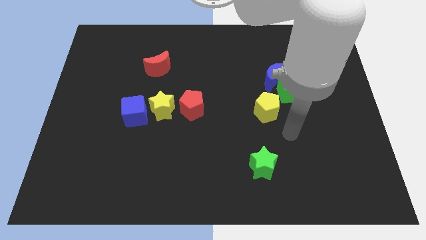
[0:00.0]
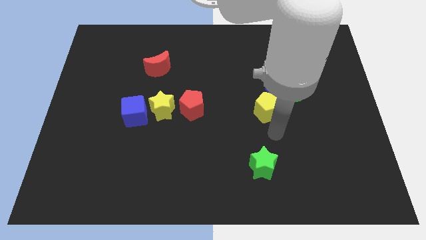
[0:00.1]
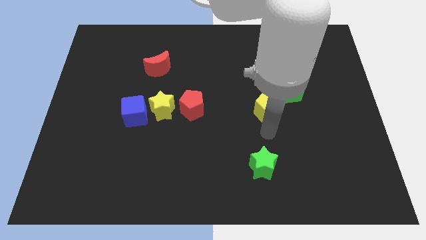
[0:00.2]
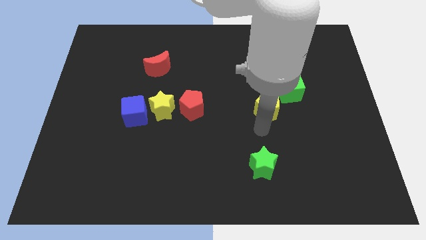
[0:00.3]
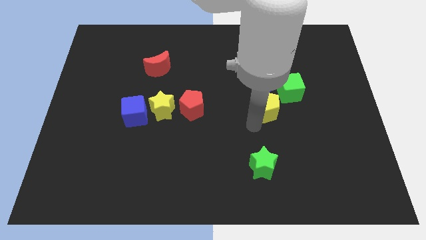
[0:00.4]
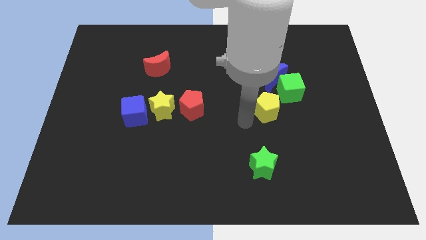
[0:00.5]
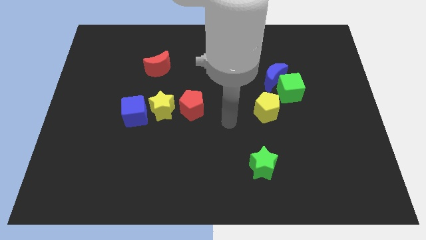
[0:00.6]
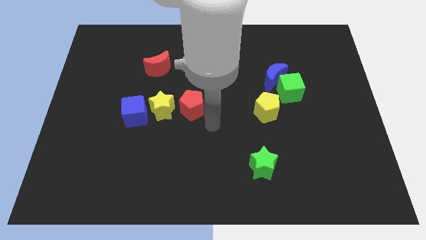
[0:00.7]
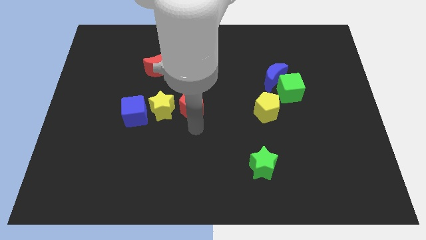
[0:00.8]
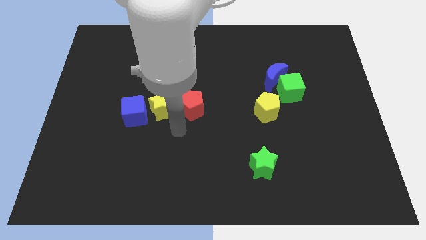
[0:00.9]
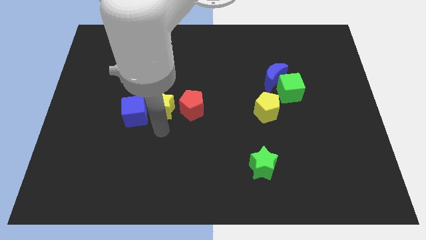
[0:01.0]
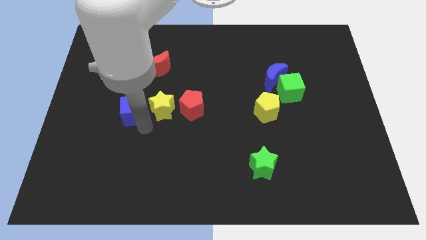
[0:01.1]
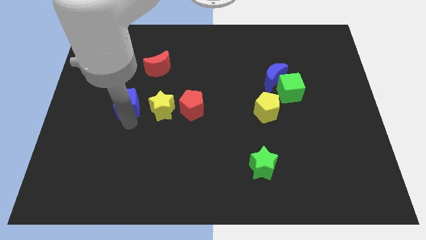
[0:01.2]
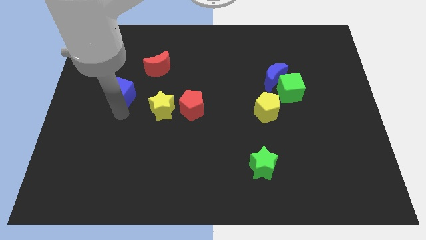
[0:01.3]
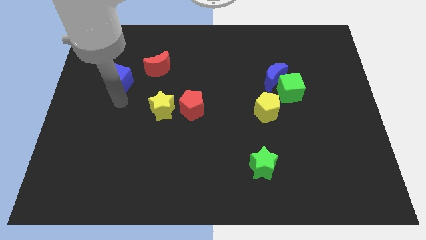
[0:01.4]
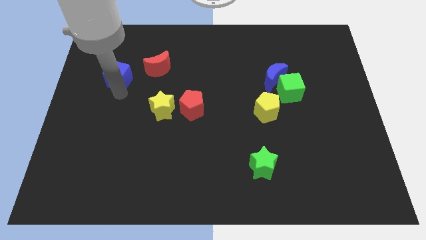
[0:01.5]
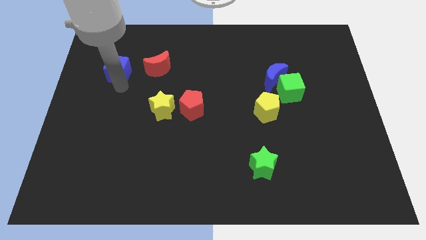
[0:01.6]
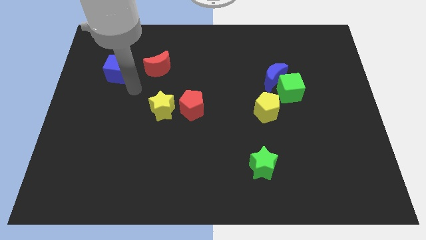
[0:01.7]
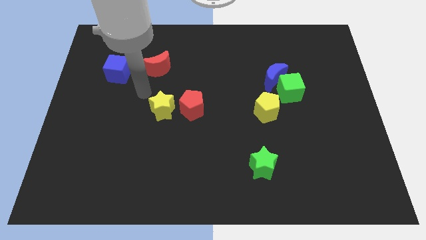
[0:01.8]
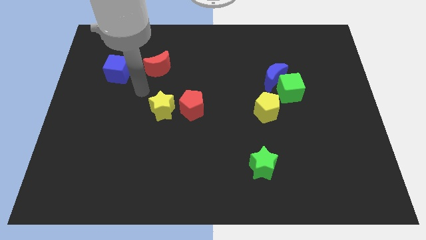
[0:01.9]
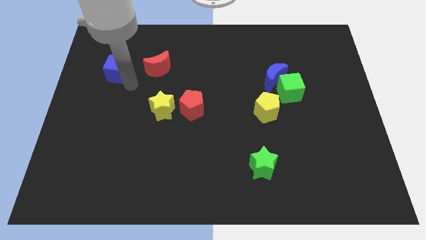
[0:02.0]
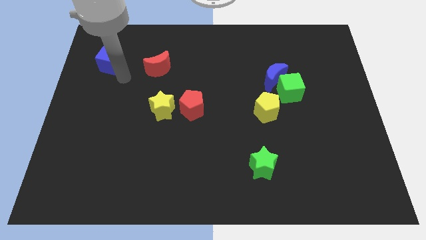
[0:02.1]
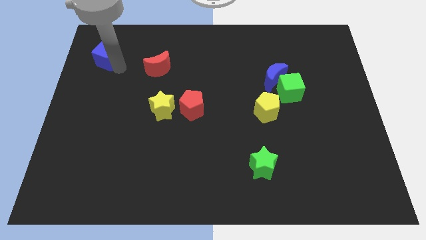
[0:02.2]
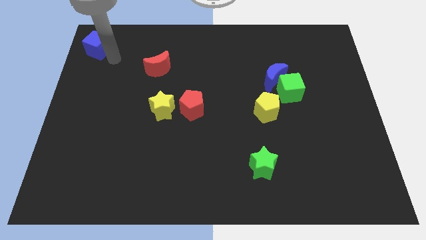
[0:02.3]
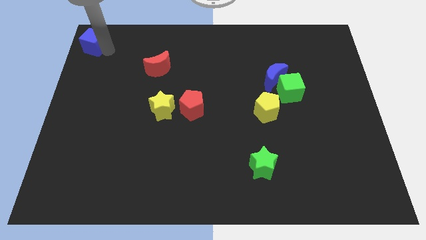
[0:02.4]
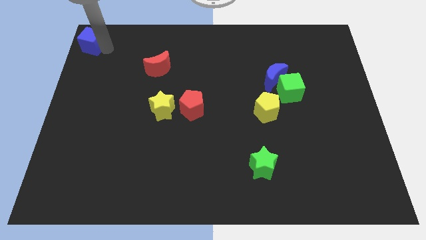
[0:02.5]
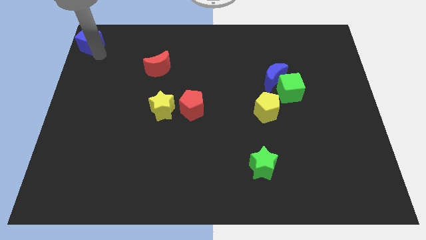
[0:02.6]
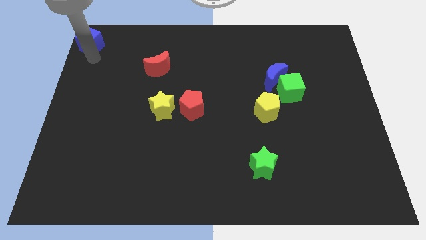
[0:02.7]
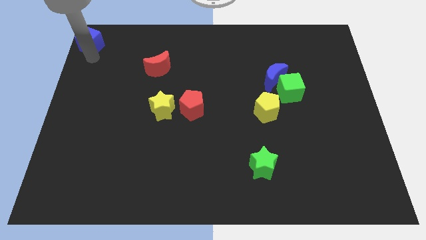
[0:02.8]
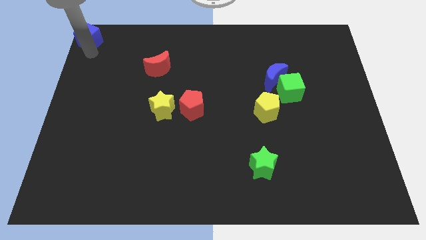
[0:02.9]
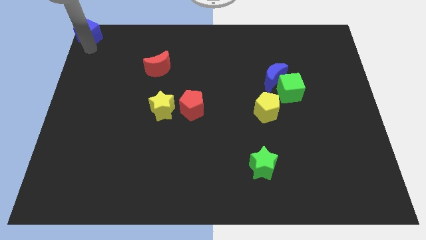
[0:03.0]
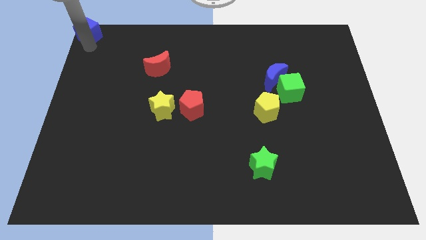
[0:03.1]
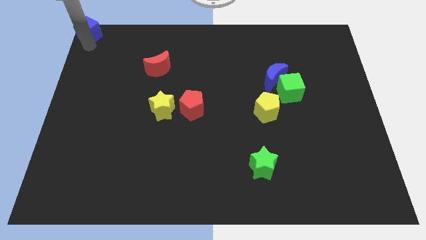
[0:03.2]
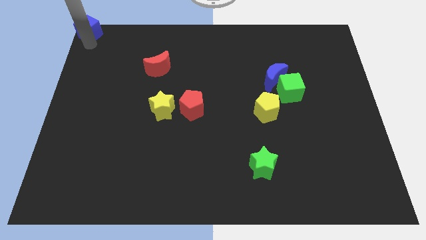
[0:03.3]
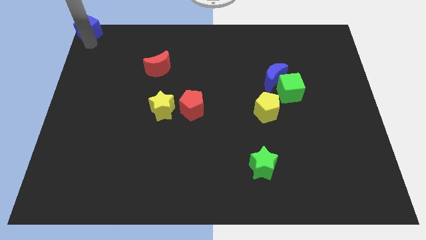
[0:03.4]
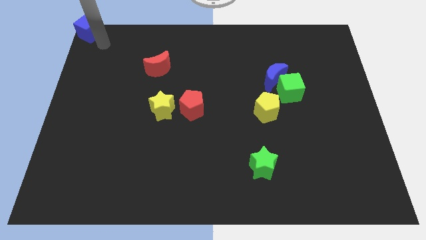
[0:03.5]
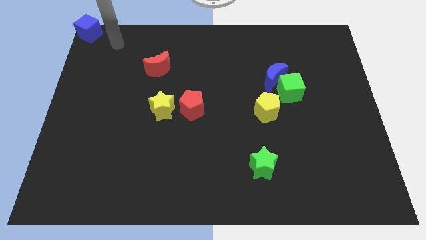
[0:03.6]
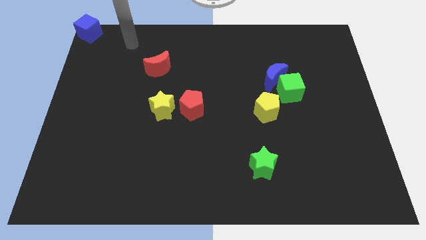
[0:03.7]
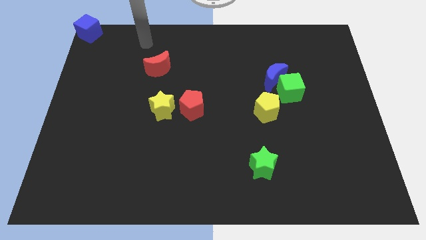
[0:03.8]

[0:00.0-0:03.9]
place the blue cube at the top left of the table

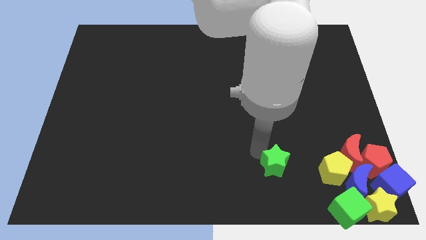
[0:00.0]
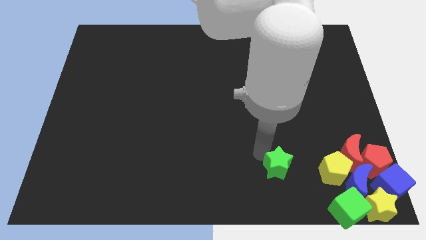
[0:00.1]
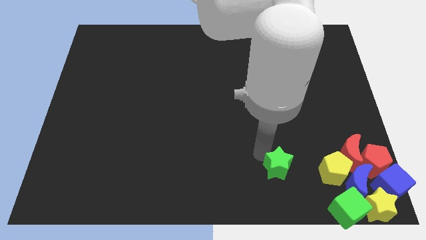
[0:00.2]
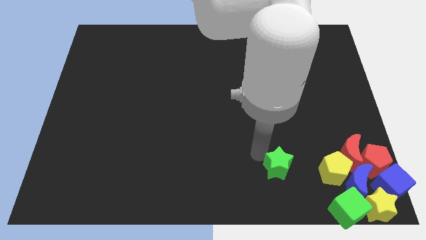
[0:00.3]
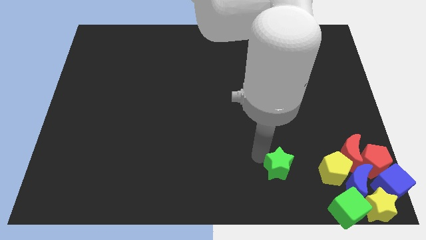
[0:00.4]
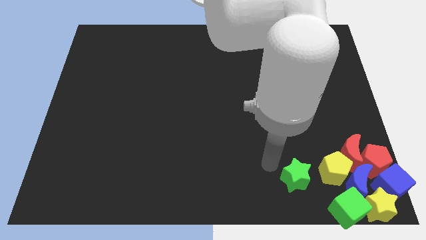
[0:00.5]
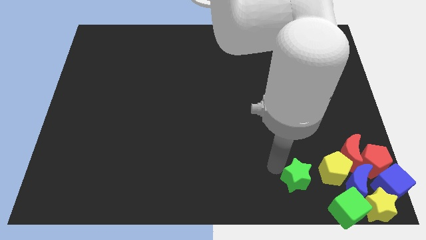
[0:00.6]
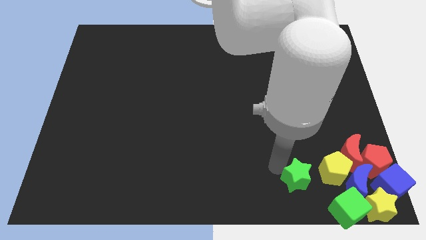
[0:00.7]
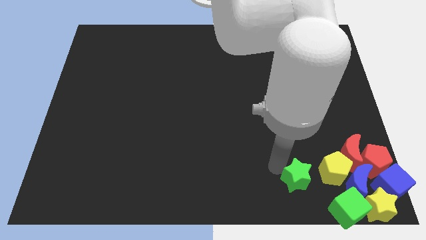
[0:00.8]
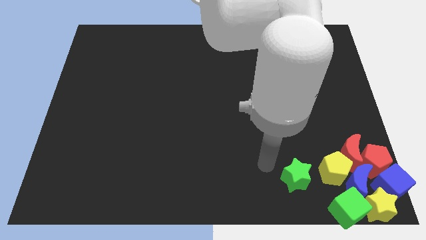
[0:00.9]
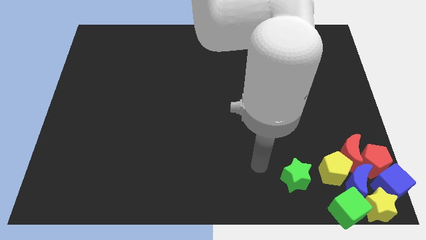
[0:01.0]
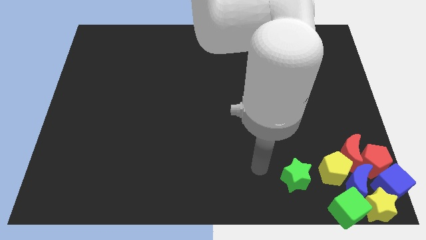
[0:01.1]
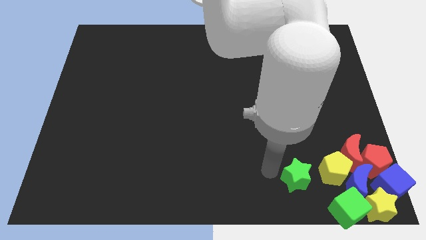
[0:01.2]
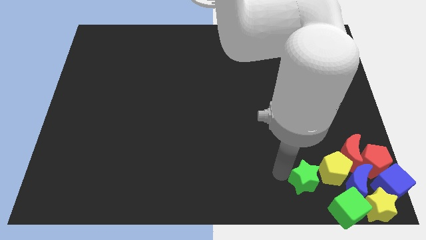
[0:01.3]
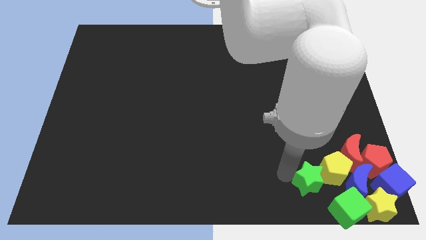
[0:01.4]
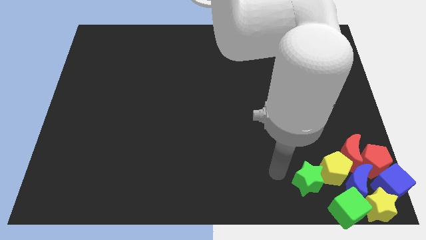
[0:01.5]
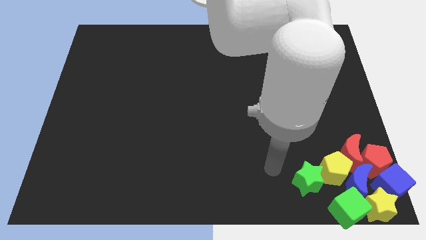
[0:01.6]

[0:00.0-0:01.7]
move the green star close to the yellow pentagon from the left

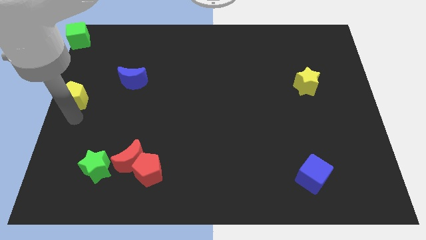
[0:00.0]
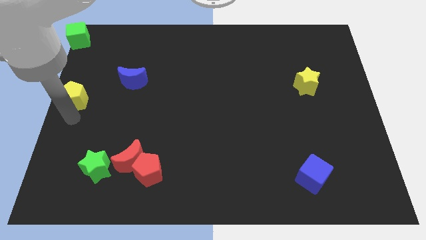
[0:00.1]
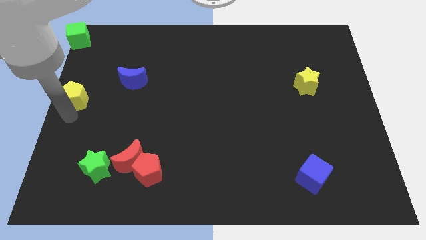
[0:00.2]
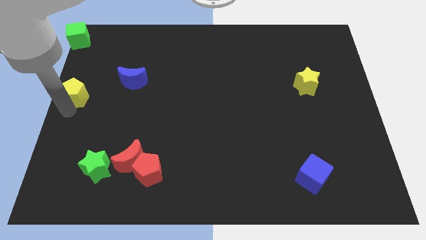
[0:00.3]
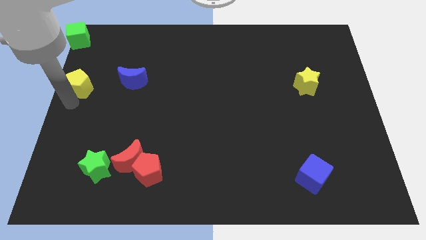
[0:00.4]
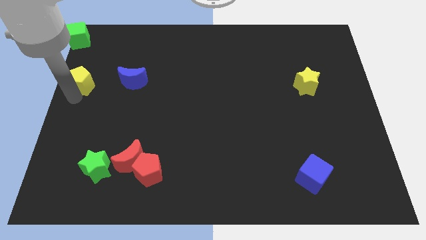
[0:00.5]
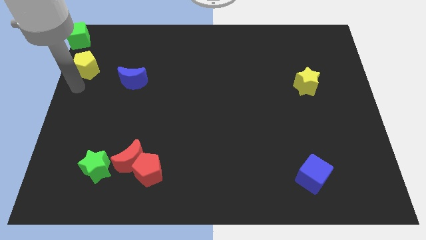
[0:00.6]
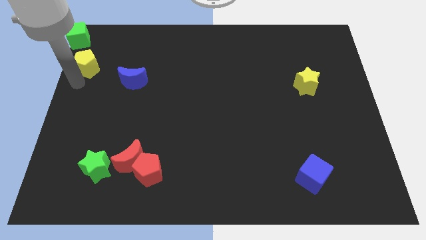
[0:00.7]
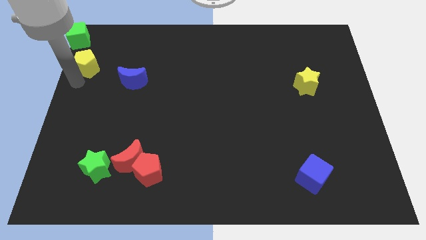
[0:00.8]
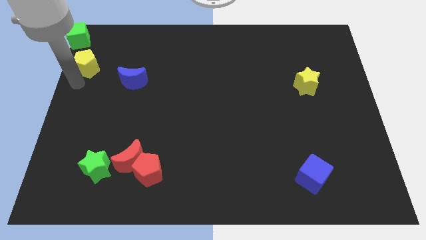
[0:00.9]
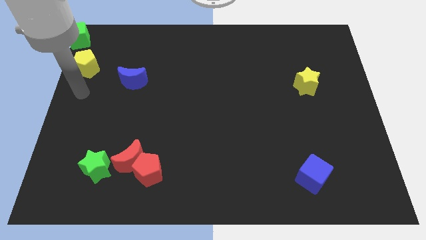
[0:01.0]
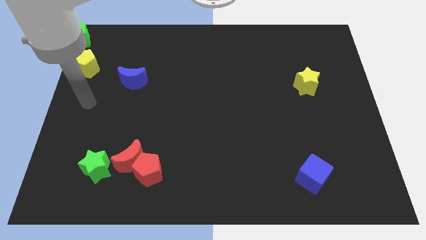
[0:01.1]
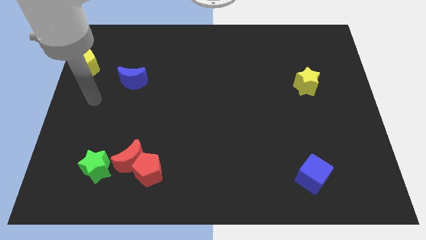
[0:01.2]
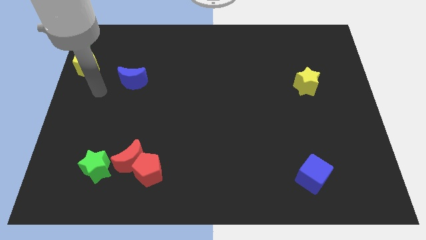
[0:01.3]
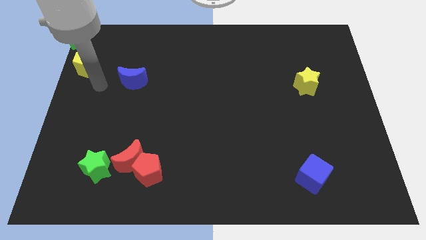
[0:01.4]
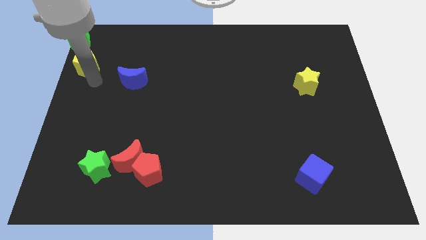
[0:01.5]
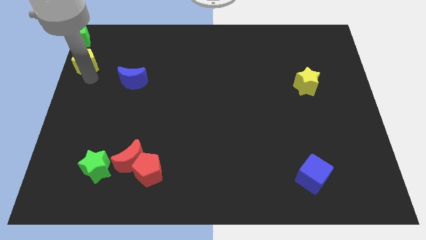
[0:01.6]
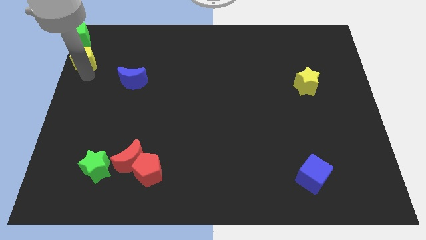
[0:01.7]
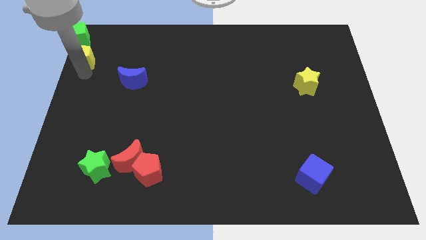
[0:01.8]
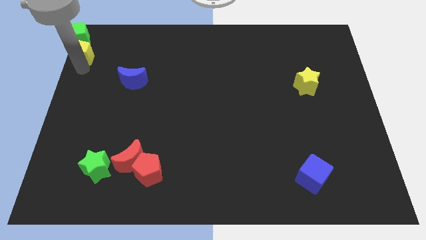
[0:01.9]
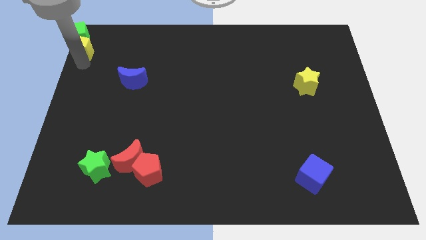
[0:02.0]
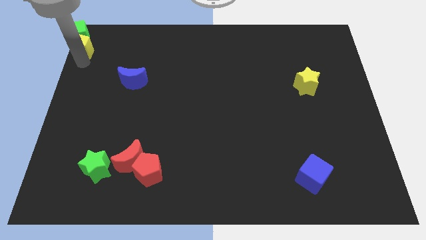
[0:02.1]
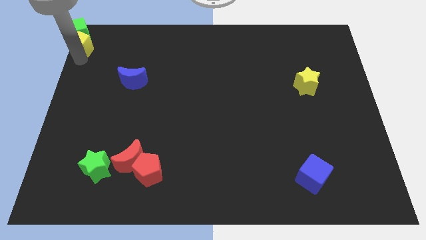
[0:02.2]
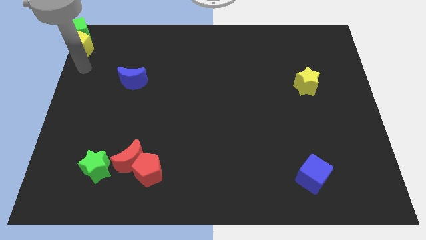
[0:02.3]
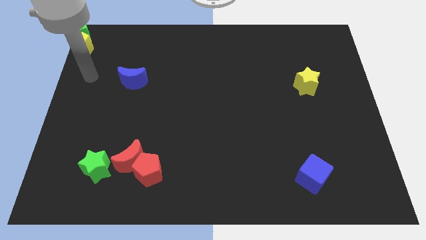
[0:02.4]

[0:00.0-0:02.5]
push yellow pentagon towards green cube

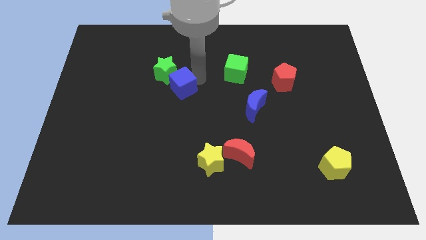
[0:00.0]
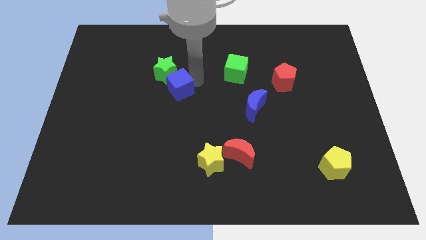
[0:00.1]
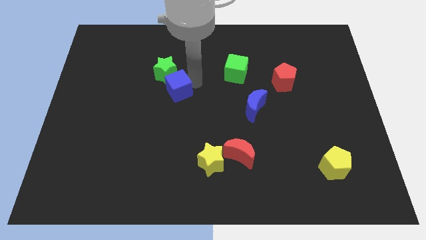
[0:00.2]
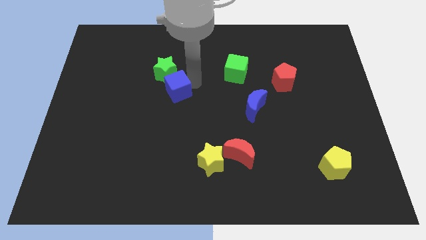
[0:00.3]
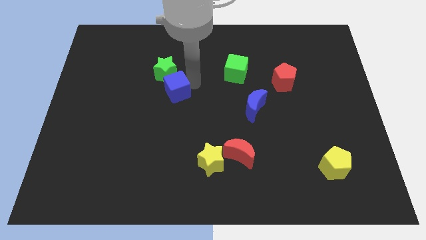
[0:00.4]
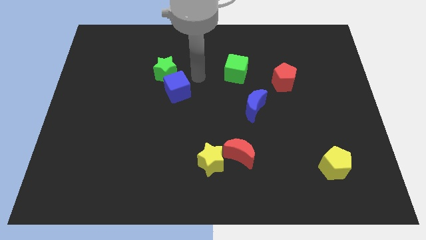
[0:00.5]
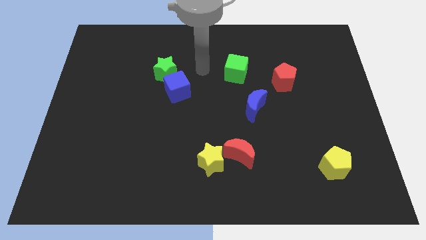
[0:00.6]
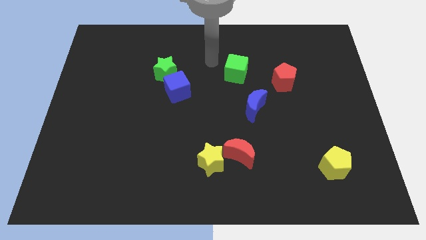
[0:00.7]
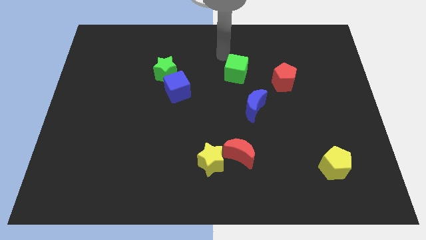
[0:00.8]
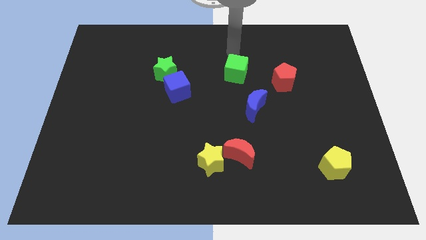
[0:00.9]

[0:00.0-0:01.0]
point your arm above green cube
